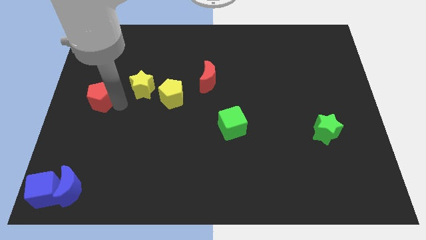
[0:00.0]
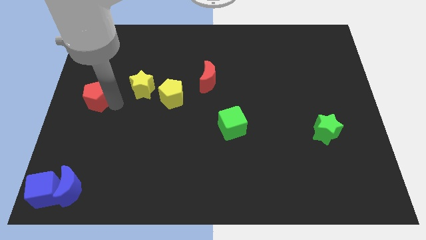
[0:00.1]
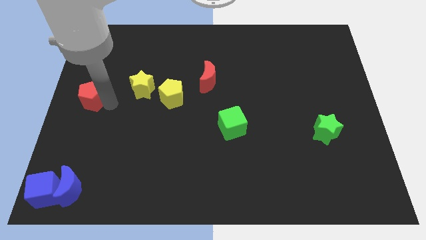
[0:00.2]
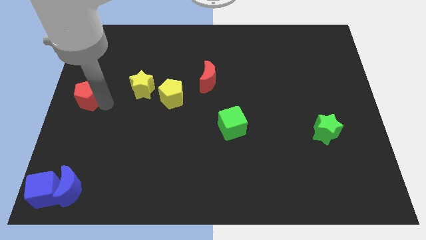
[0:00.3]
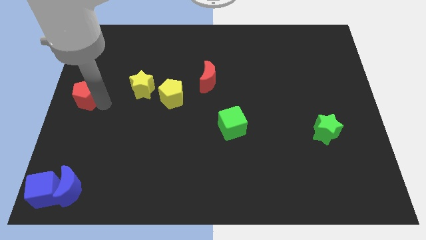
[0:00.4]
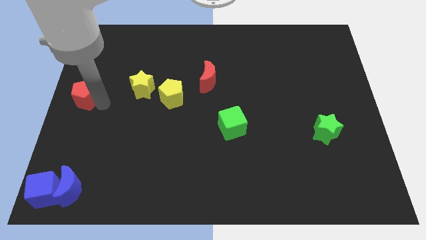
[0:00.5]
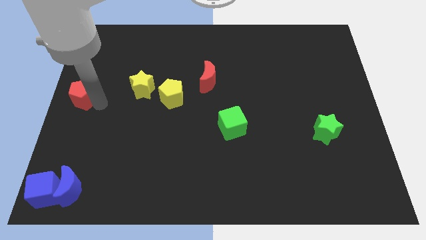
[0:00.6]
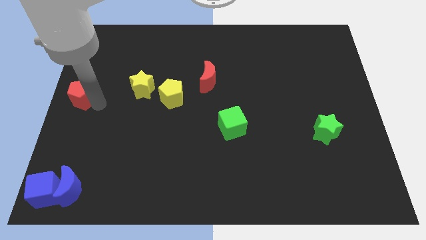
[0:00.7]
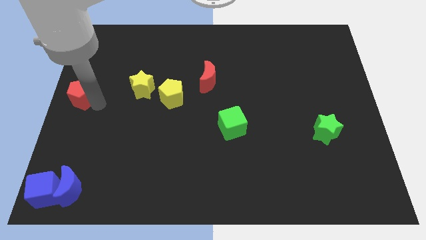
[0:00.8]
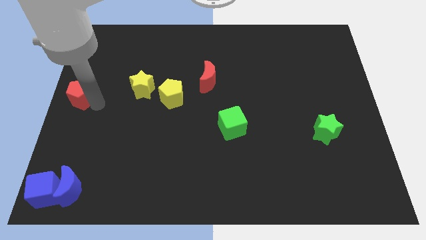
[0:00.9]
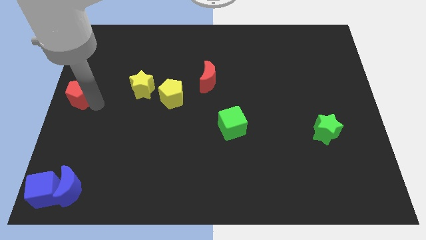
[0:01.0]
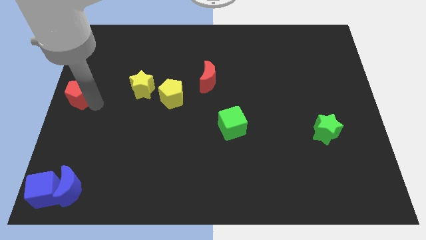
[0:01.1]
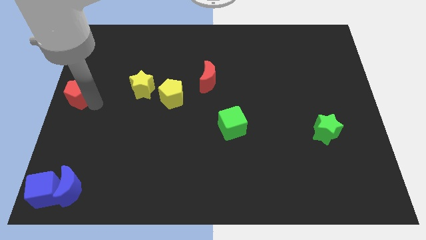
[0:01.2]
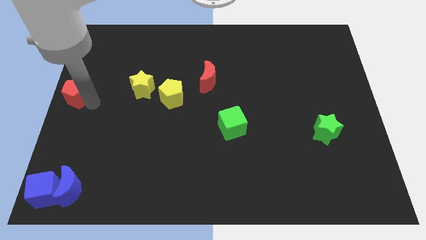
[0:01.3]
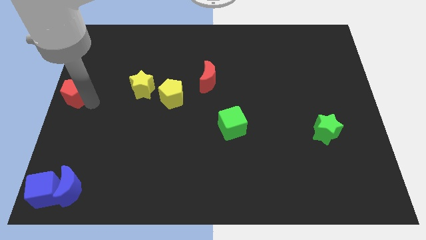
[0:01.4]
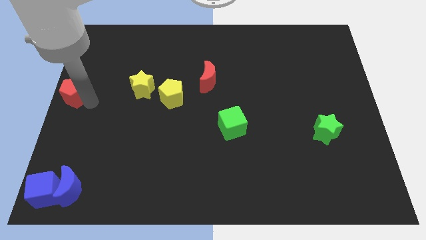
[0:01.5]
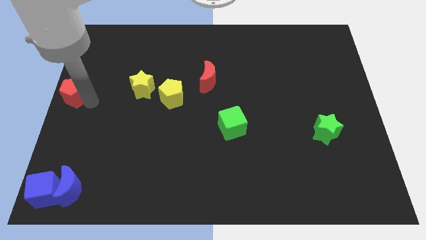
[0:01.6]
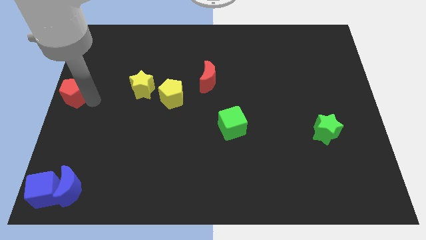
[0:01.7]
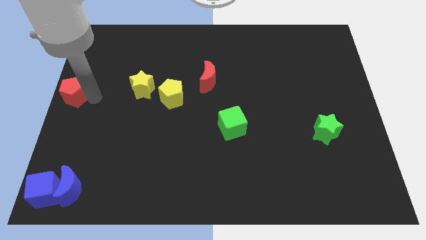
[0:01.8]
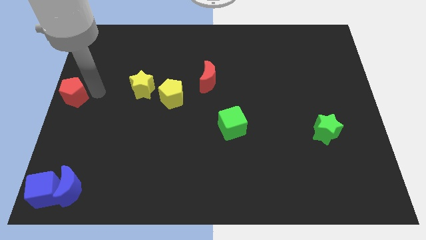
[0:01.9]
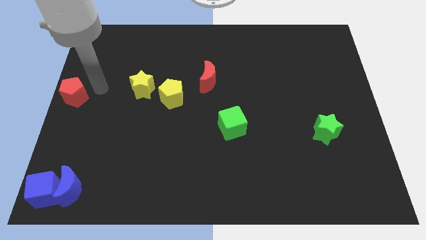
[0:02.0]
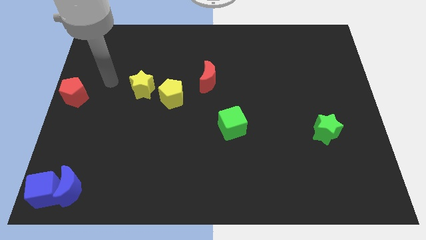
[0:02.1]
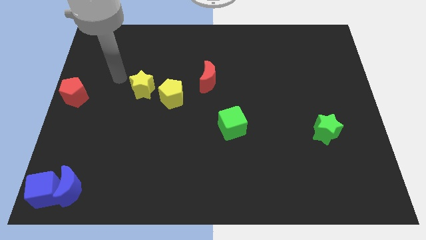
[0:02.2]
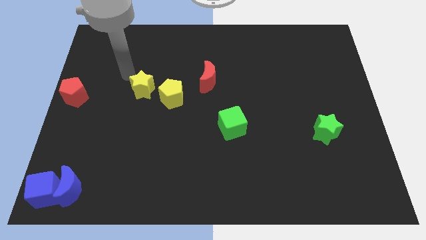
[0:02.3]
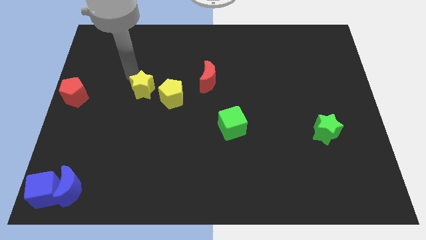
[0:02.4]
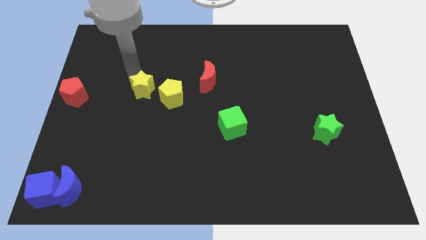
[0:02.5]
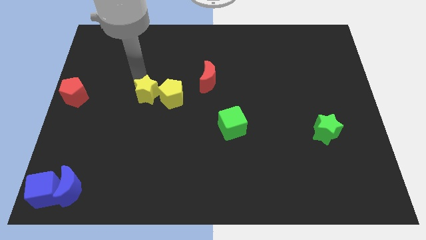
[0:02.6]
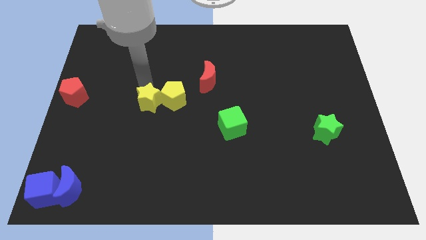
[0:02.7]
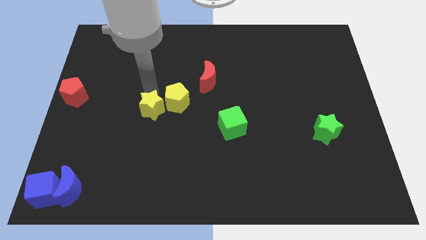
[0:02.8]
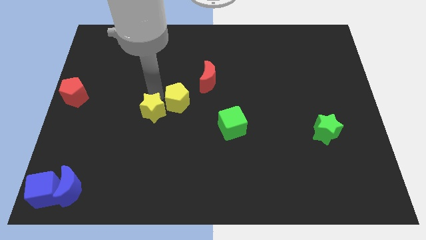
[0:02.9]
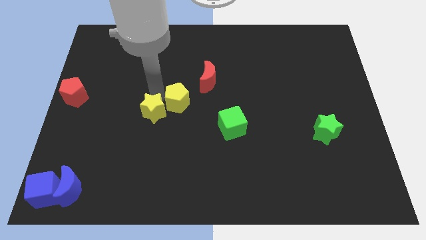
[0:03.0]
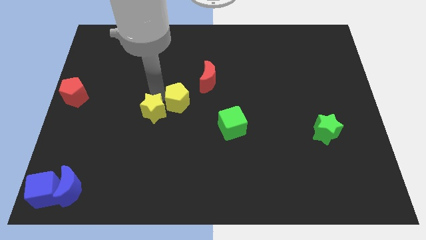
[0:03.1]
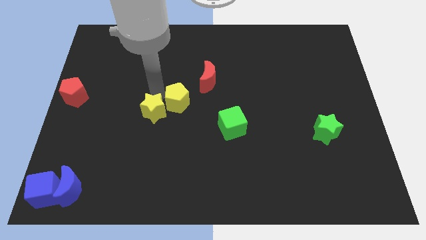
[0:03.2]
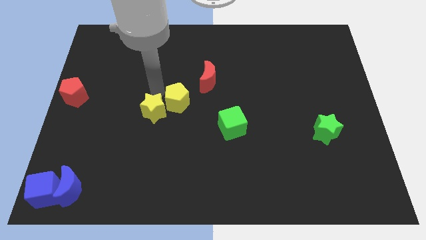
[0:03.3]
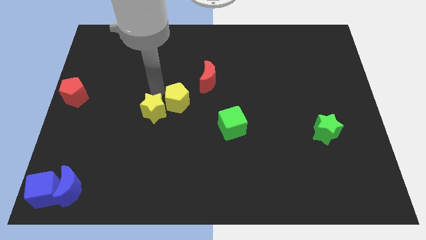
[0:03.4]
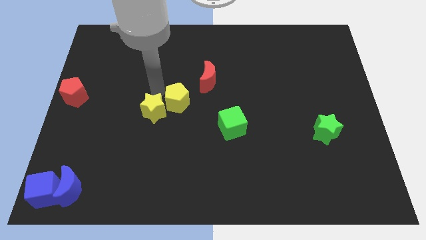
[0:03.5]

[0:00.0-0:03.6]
move the red pentagon to left of the yellow star

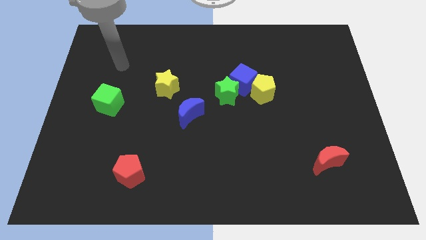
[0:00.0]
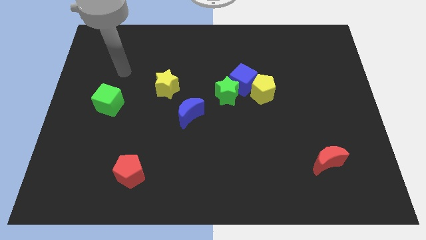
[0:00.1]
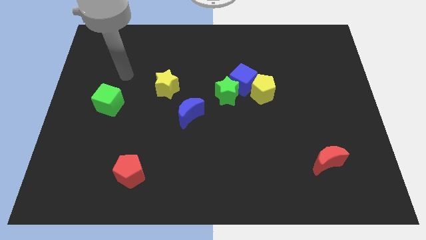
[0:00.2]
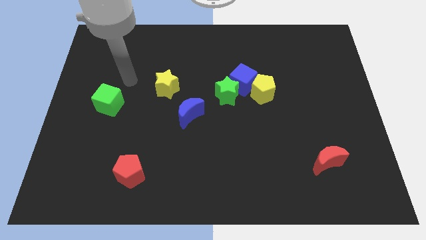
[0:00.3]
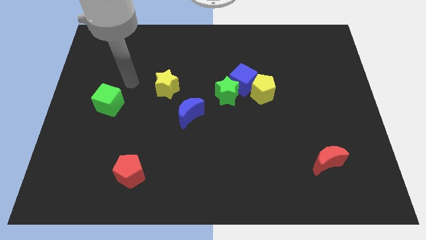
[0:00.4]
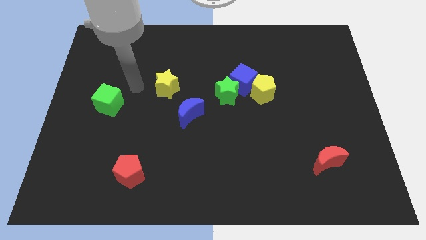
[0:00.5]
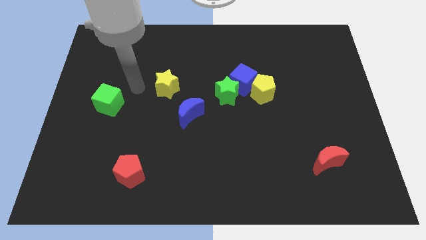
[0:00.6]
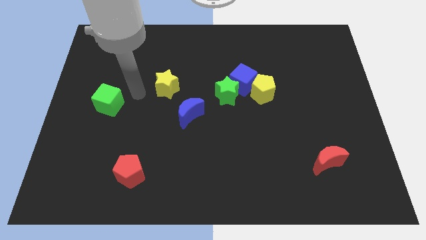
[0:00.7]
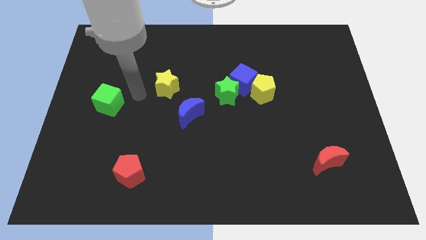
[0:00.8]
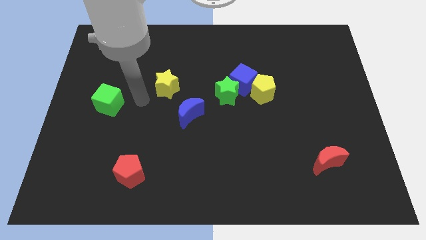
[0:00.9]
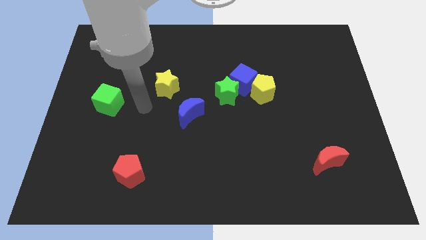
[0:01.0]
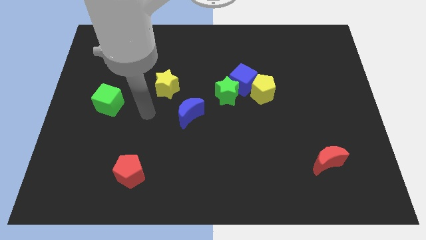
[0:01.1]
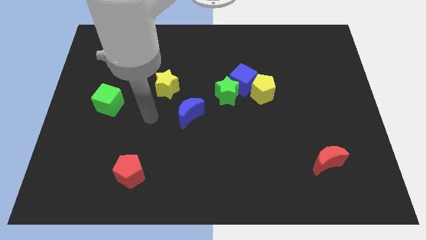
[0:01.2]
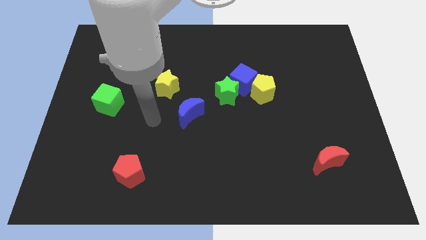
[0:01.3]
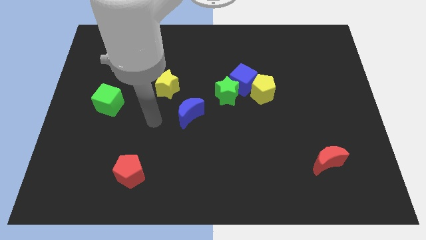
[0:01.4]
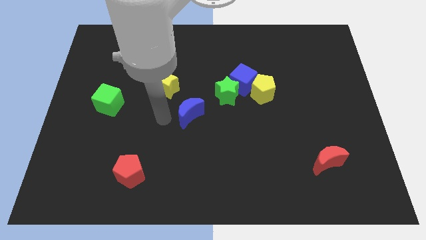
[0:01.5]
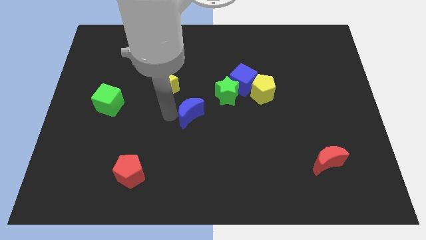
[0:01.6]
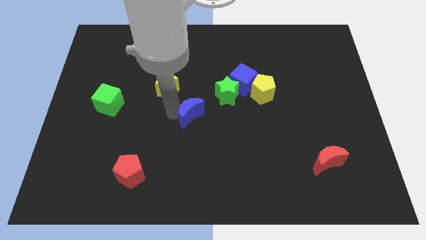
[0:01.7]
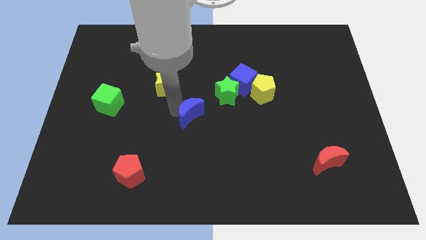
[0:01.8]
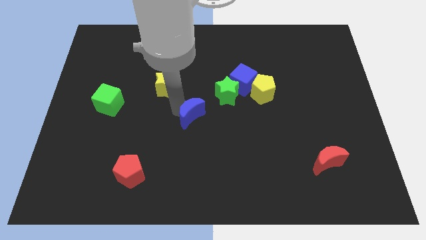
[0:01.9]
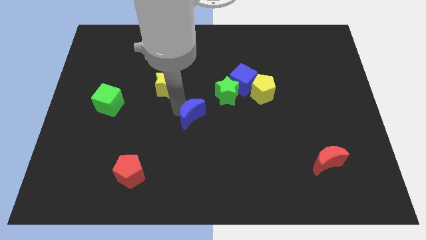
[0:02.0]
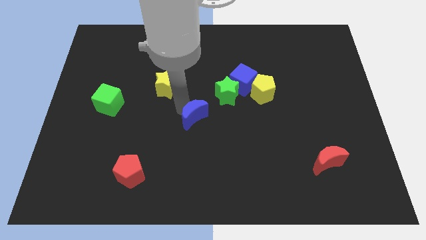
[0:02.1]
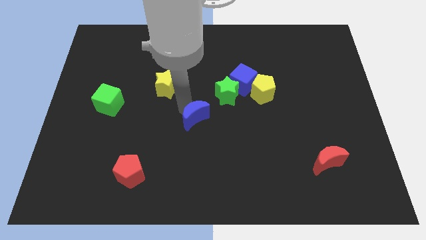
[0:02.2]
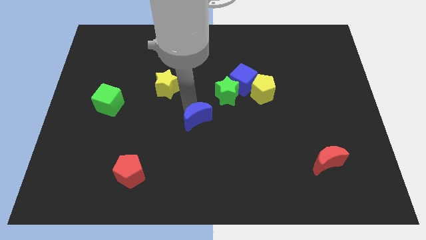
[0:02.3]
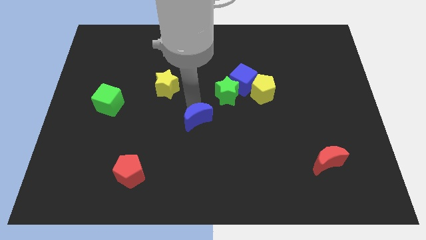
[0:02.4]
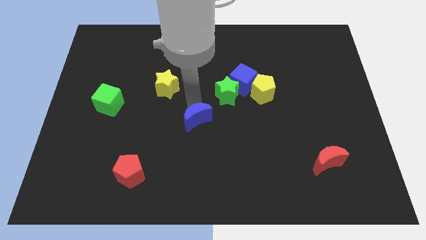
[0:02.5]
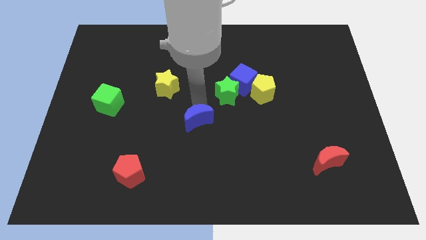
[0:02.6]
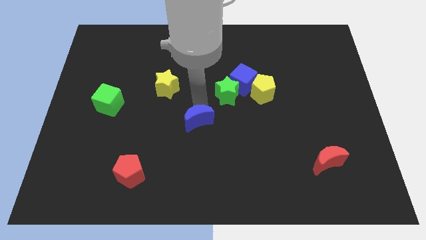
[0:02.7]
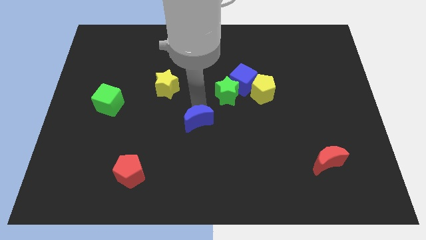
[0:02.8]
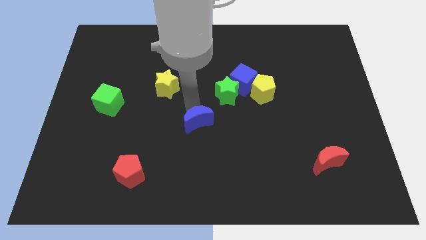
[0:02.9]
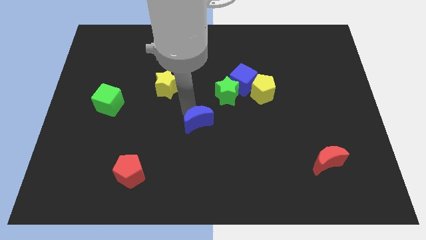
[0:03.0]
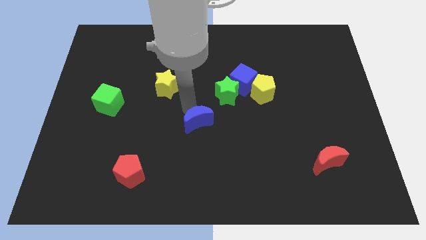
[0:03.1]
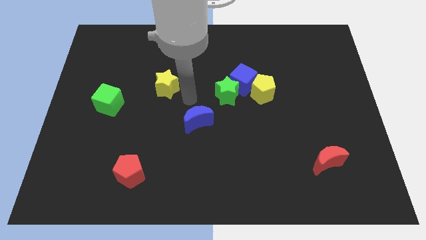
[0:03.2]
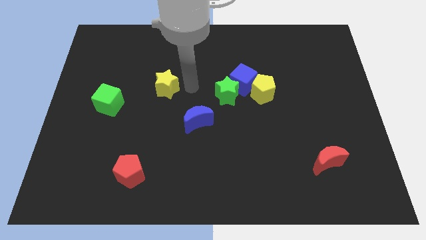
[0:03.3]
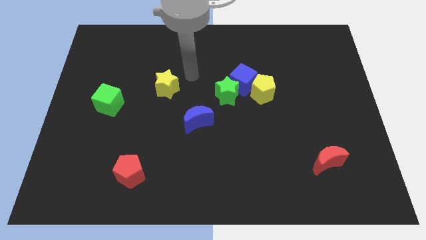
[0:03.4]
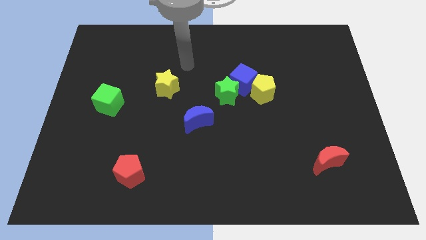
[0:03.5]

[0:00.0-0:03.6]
slightly move the blue crescent towards the centre of the board

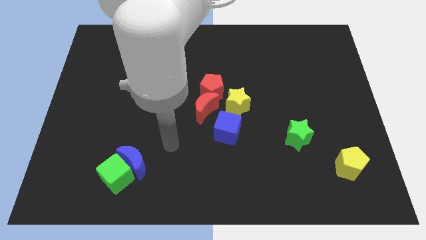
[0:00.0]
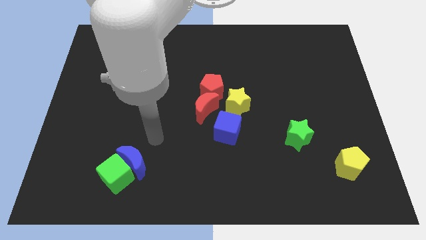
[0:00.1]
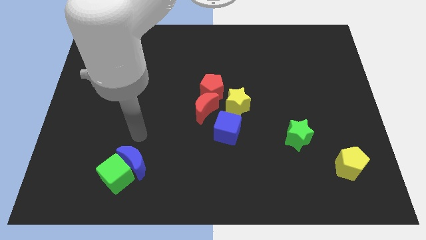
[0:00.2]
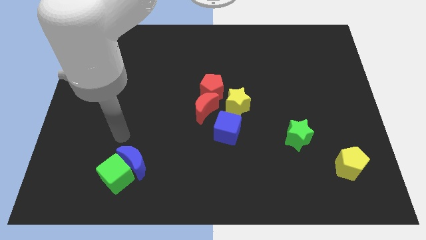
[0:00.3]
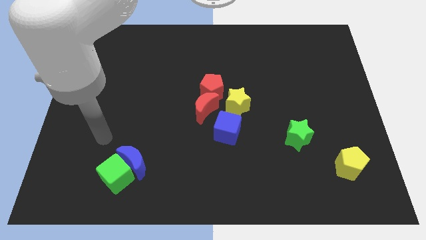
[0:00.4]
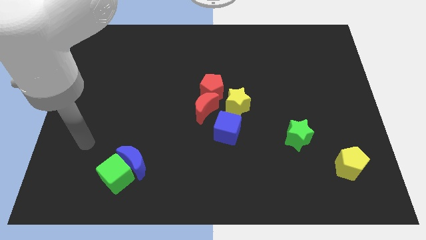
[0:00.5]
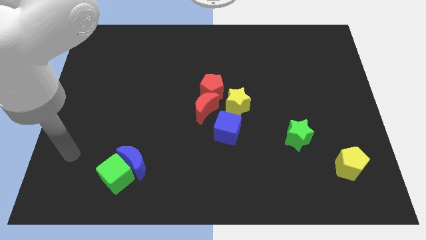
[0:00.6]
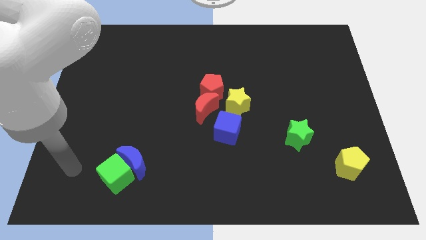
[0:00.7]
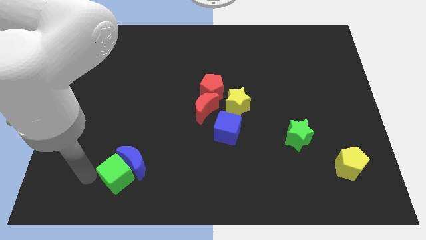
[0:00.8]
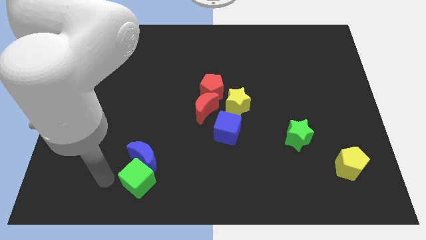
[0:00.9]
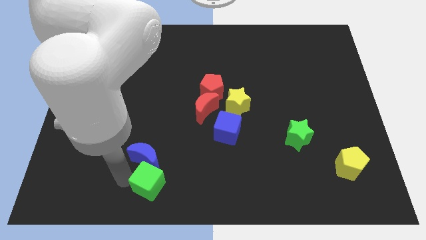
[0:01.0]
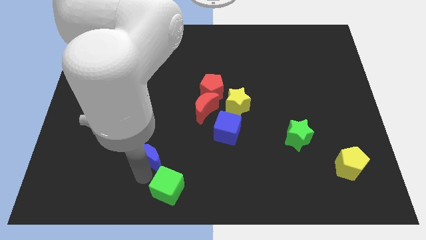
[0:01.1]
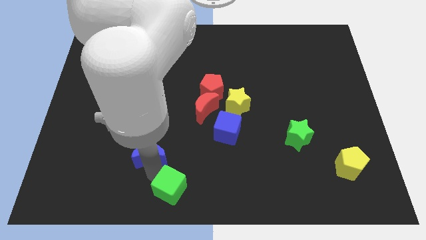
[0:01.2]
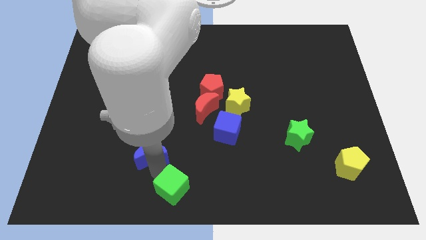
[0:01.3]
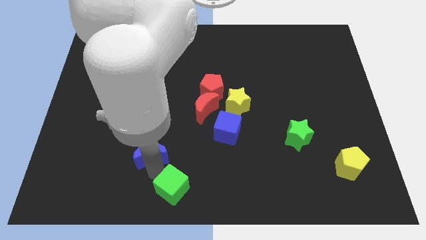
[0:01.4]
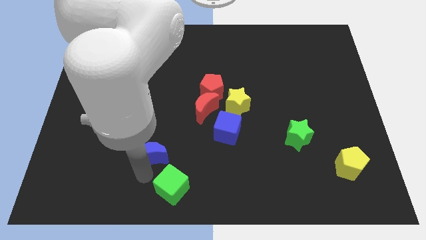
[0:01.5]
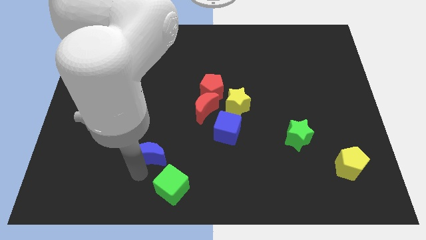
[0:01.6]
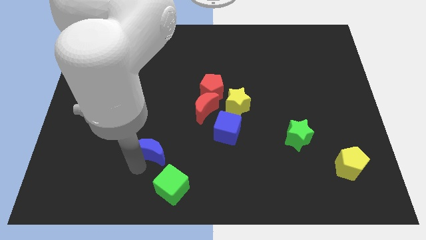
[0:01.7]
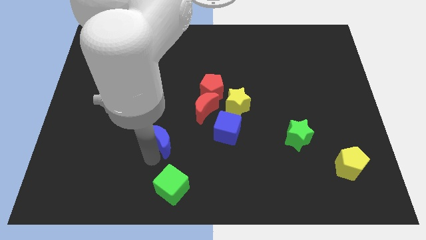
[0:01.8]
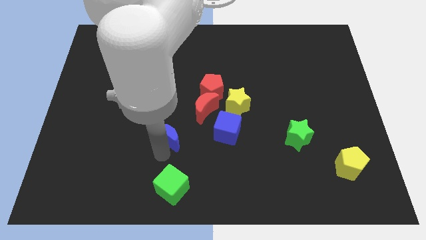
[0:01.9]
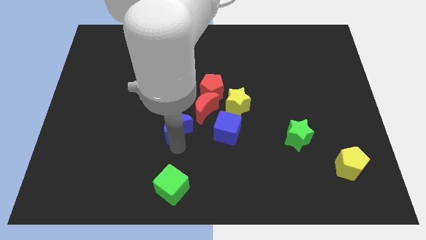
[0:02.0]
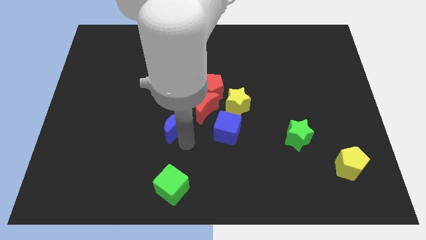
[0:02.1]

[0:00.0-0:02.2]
separate blue moon and green cube from each other
